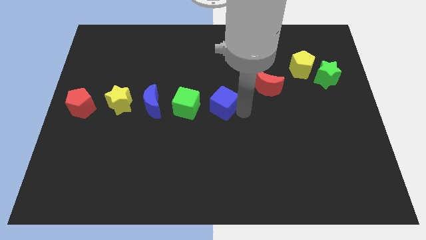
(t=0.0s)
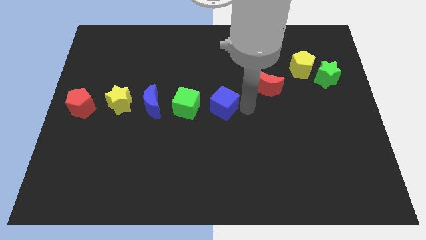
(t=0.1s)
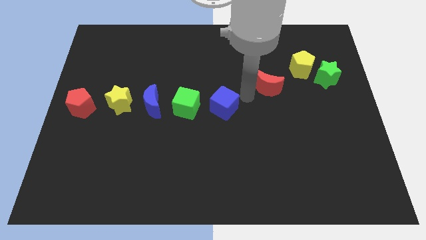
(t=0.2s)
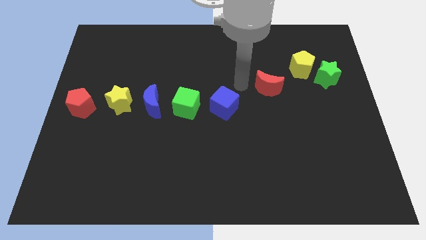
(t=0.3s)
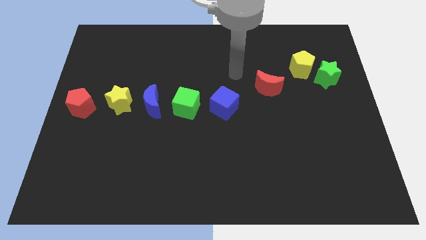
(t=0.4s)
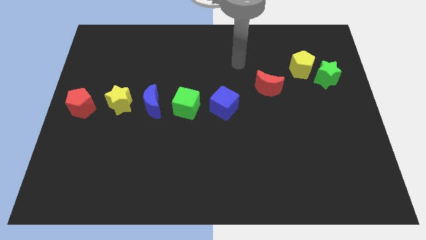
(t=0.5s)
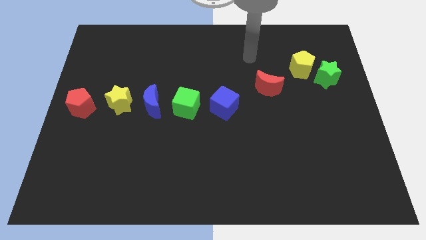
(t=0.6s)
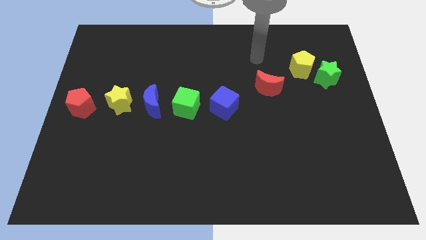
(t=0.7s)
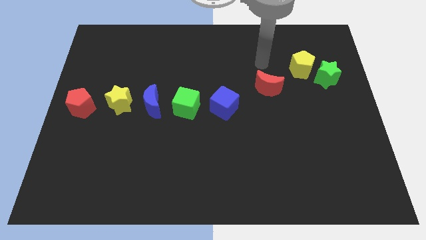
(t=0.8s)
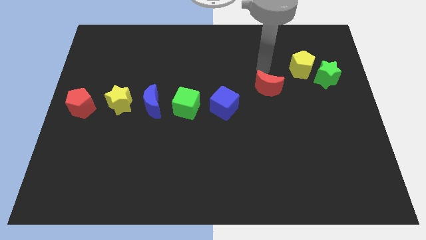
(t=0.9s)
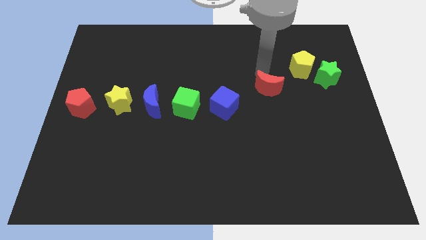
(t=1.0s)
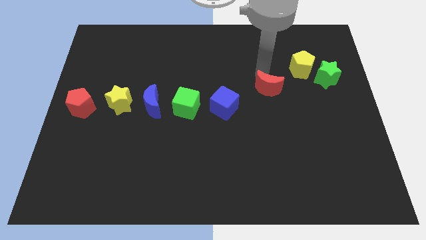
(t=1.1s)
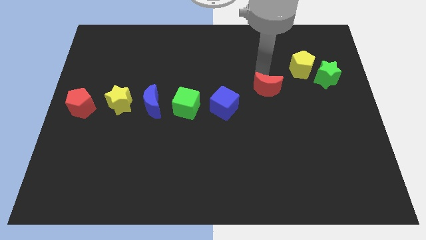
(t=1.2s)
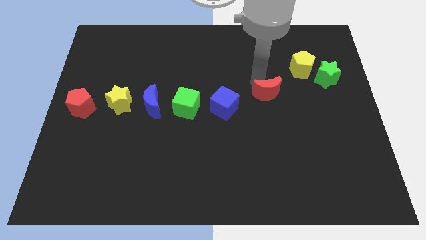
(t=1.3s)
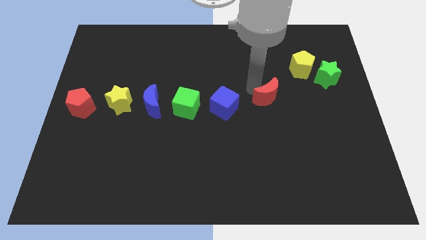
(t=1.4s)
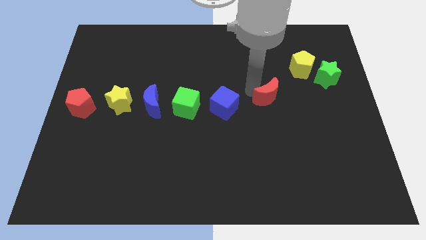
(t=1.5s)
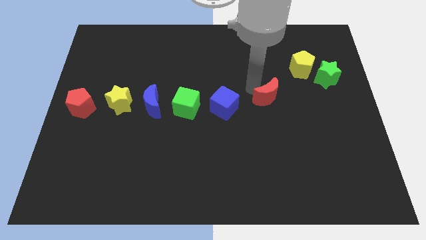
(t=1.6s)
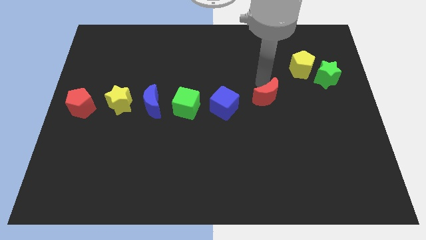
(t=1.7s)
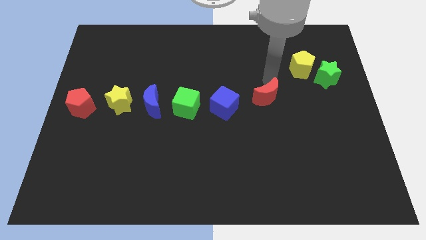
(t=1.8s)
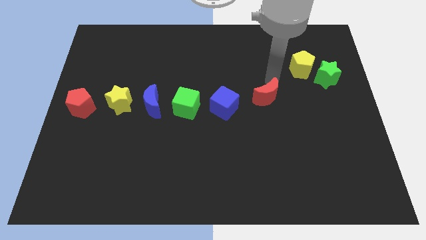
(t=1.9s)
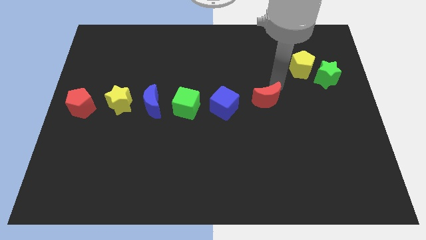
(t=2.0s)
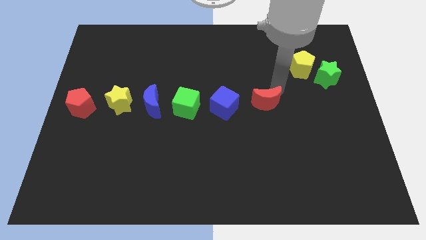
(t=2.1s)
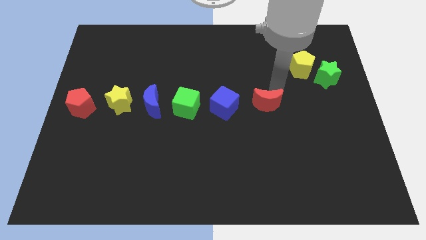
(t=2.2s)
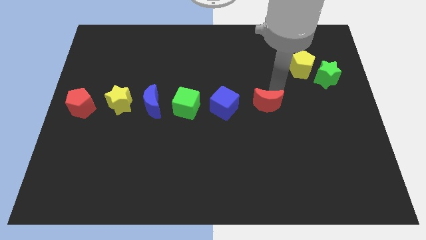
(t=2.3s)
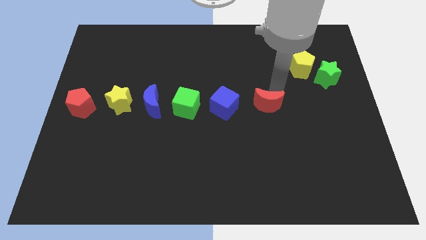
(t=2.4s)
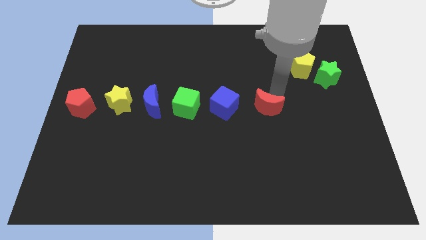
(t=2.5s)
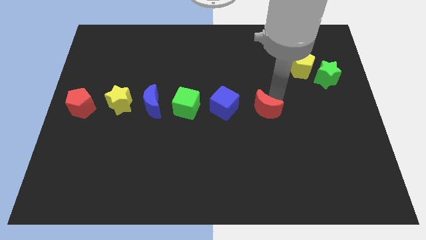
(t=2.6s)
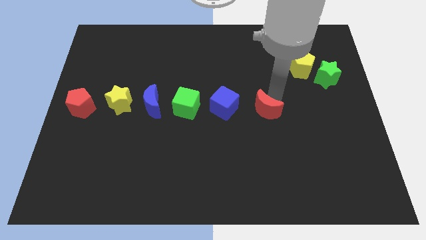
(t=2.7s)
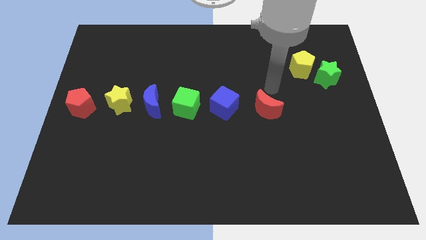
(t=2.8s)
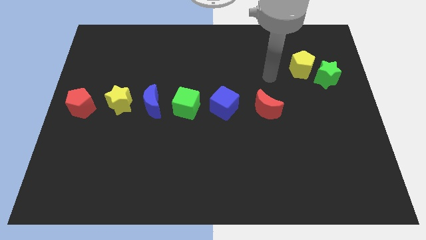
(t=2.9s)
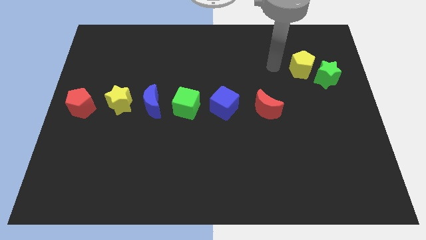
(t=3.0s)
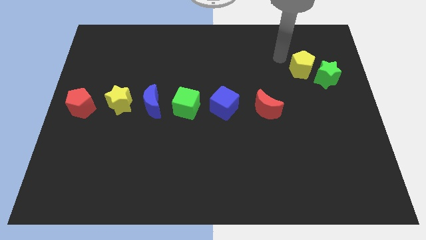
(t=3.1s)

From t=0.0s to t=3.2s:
push the red moon towards the bottom side of the board

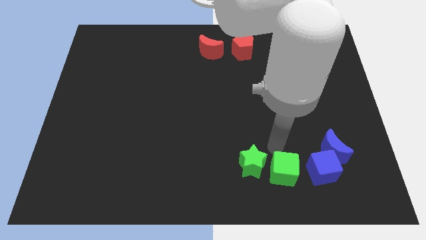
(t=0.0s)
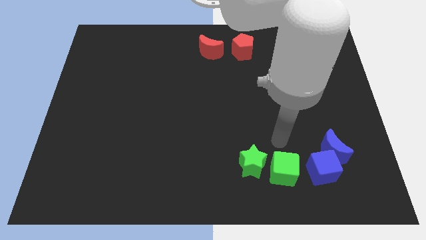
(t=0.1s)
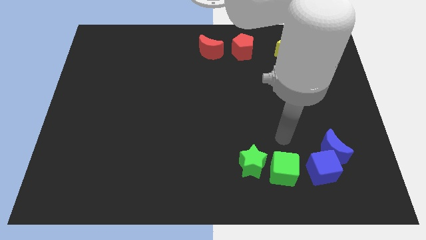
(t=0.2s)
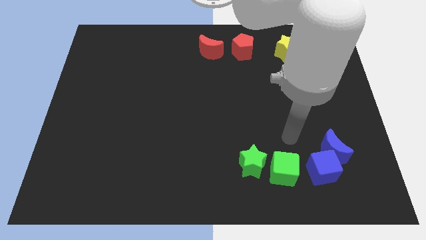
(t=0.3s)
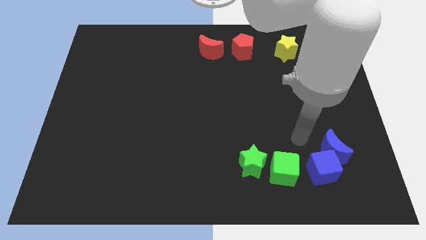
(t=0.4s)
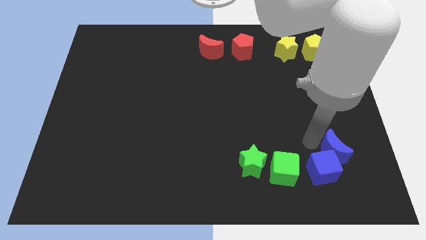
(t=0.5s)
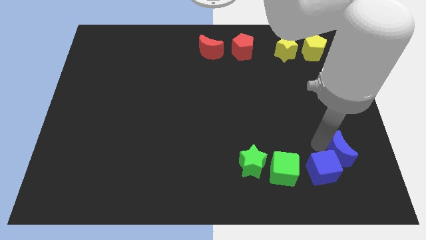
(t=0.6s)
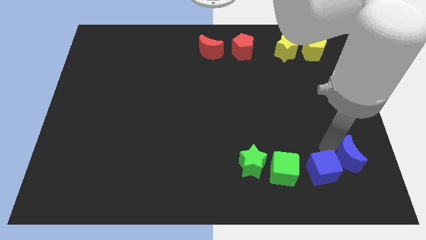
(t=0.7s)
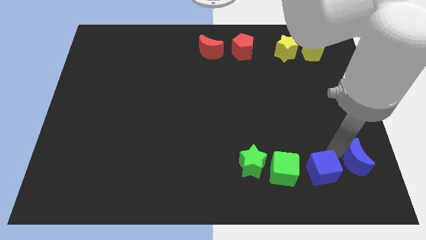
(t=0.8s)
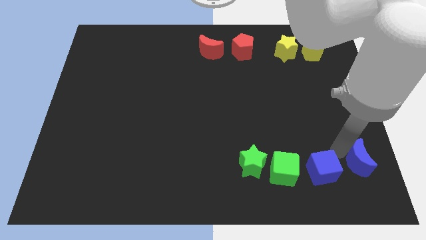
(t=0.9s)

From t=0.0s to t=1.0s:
point your arm above blue cube

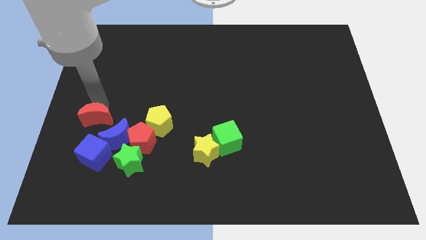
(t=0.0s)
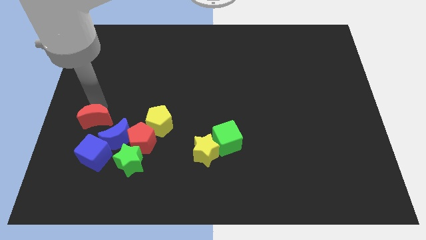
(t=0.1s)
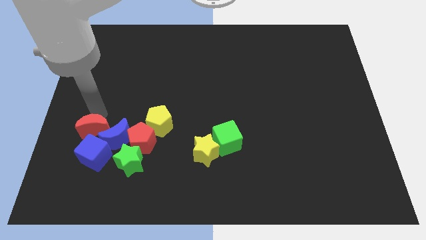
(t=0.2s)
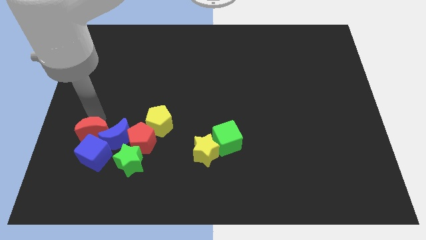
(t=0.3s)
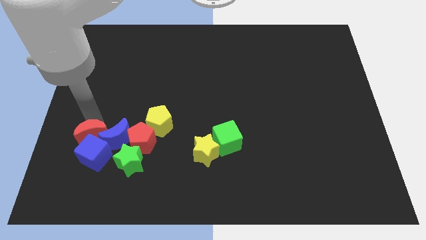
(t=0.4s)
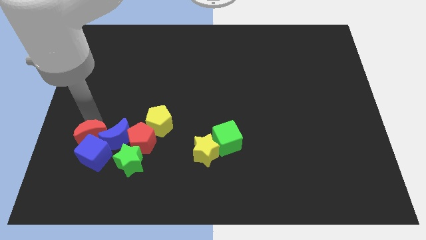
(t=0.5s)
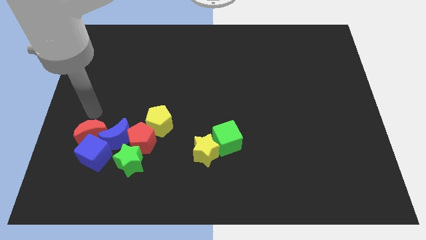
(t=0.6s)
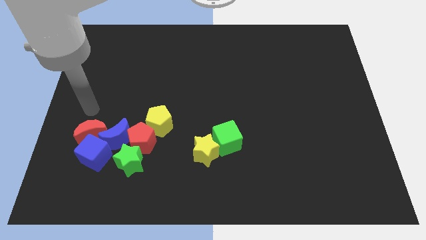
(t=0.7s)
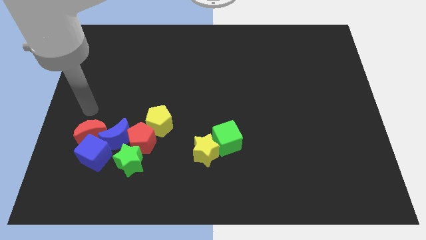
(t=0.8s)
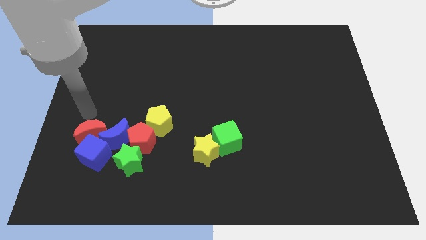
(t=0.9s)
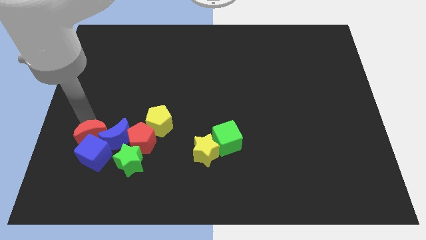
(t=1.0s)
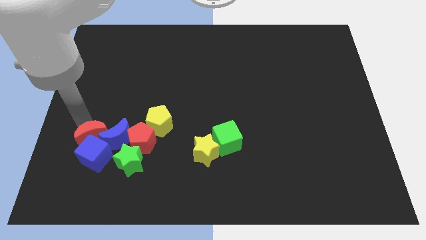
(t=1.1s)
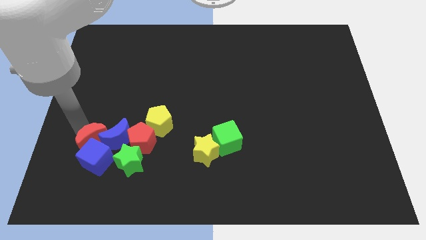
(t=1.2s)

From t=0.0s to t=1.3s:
add red moon to the blue moon and blue cube

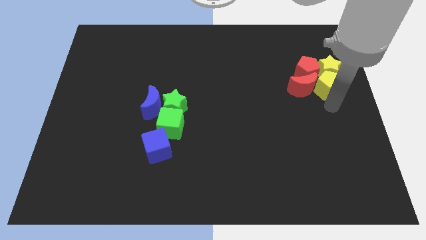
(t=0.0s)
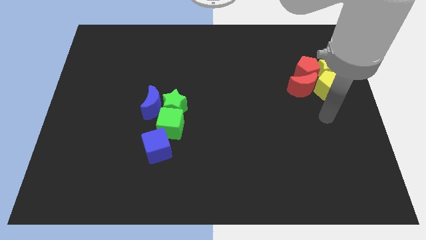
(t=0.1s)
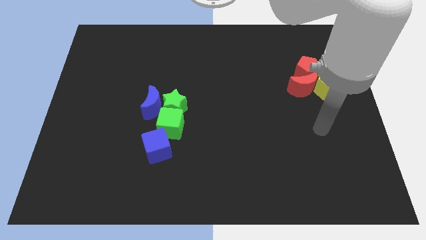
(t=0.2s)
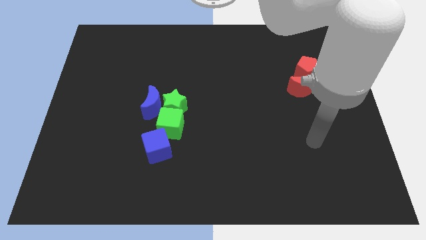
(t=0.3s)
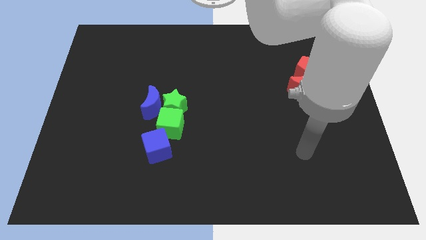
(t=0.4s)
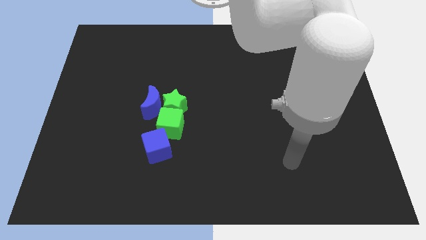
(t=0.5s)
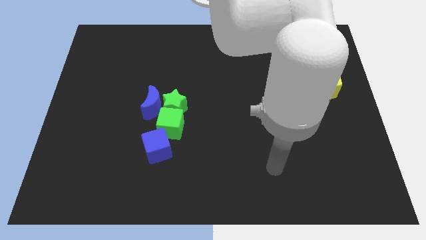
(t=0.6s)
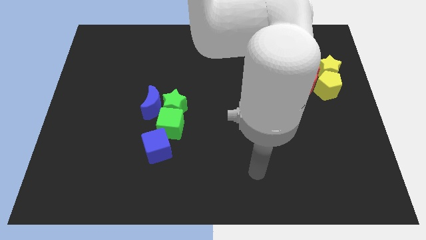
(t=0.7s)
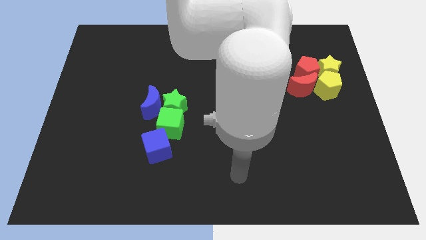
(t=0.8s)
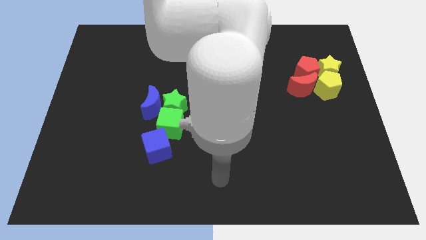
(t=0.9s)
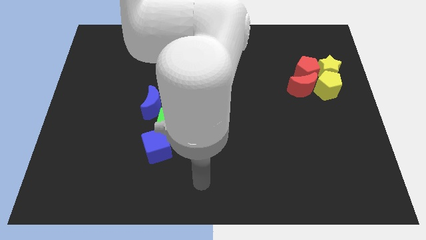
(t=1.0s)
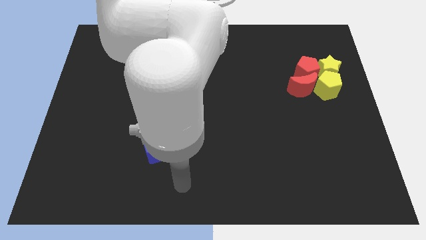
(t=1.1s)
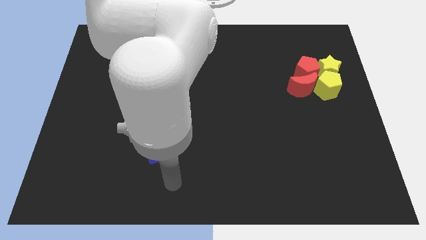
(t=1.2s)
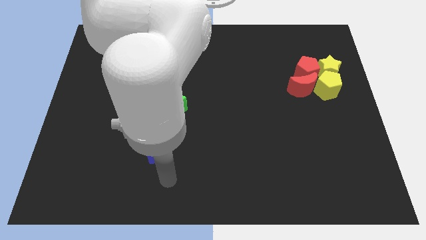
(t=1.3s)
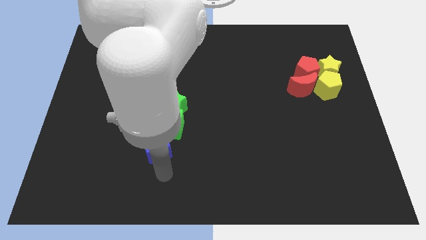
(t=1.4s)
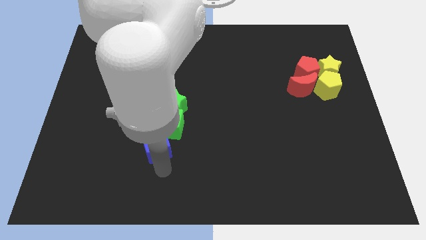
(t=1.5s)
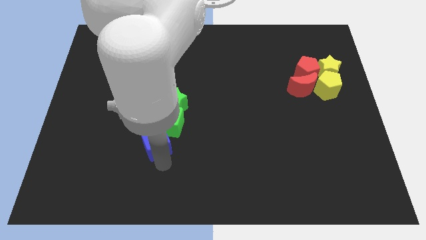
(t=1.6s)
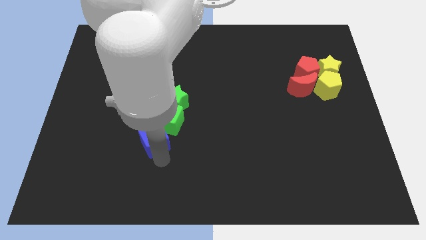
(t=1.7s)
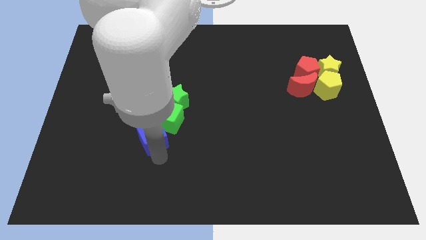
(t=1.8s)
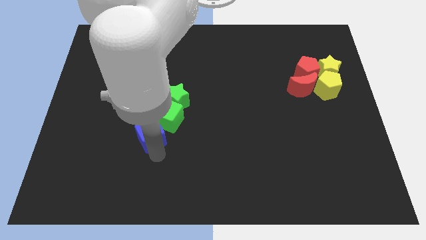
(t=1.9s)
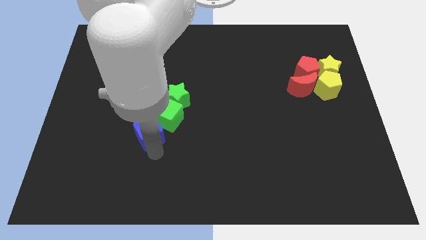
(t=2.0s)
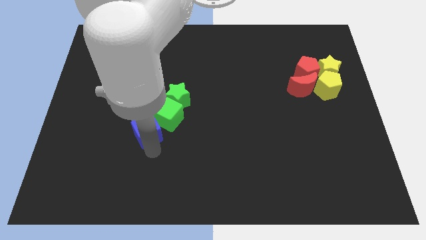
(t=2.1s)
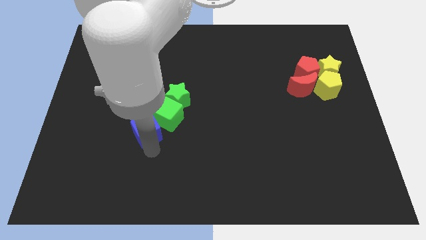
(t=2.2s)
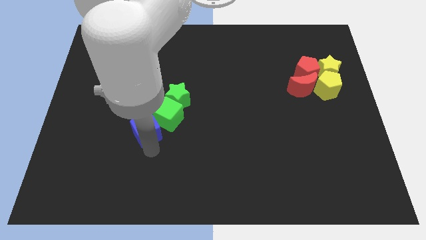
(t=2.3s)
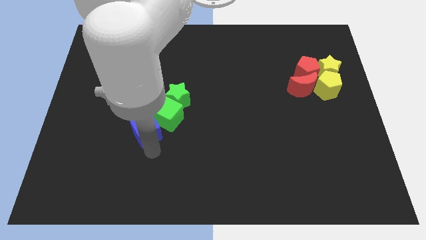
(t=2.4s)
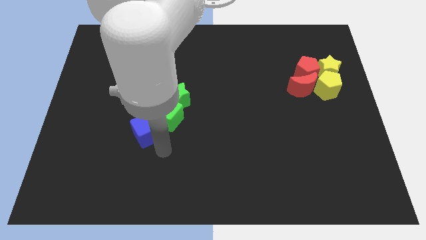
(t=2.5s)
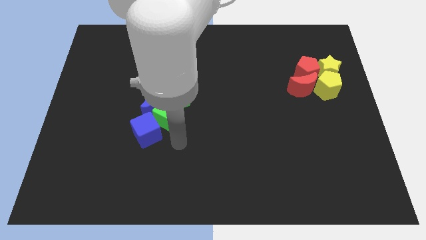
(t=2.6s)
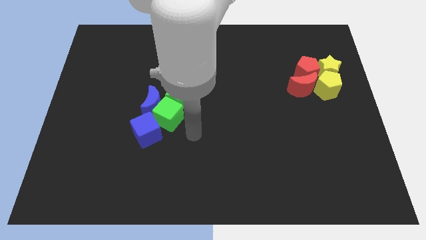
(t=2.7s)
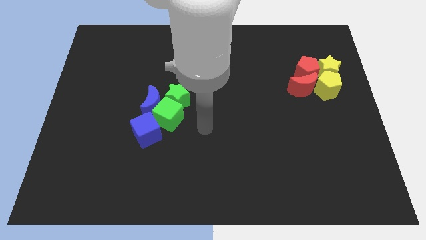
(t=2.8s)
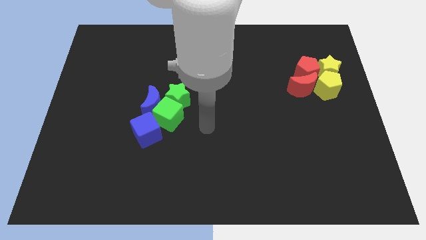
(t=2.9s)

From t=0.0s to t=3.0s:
push the green and blue blocks towards the top side of the board

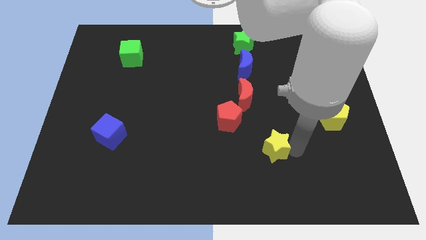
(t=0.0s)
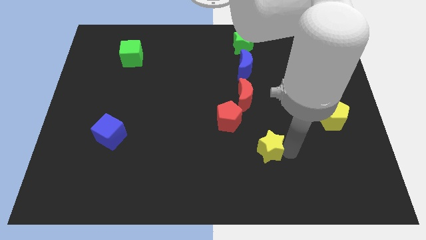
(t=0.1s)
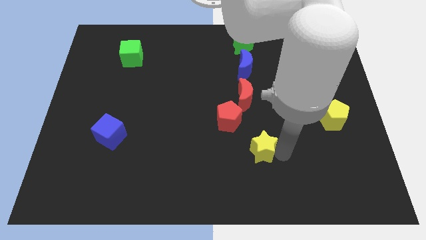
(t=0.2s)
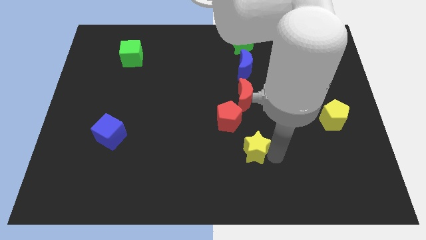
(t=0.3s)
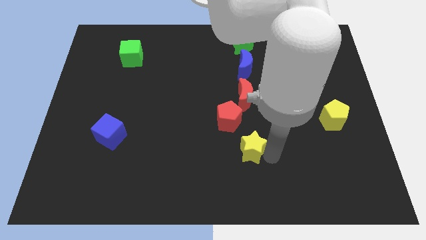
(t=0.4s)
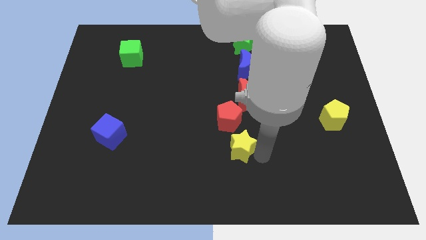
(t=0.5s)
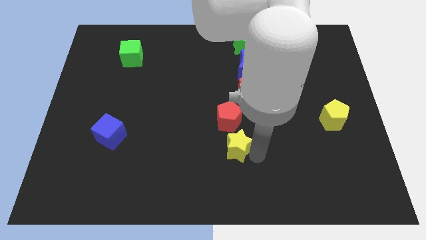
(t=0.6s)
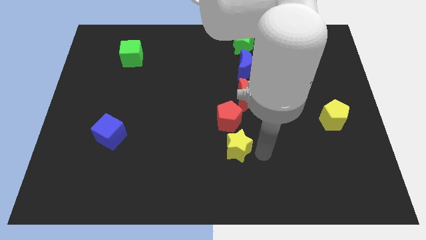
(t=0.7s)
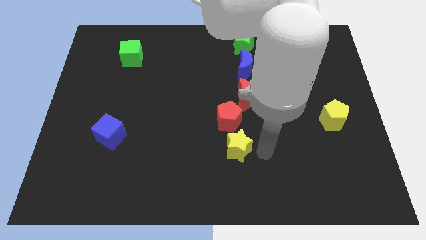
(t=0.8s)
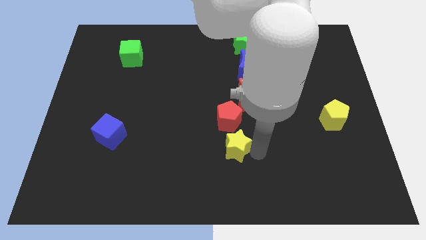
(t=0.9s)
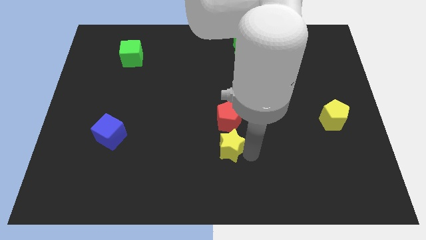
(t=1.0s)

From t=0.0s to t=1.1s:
push the yellow star to the left
